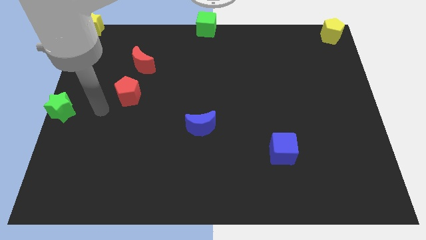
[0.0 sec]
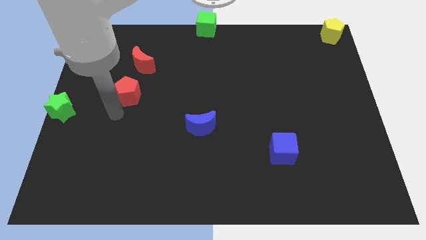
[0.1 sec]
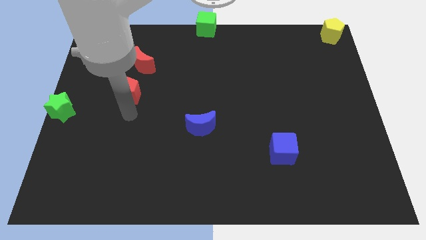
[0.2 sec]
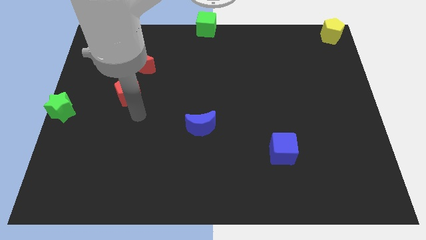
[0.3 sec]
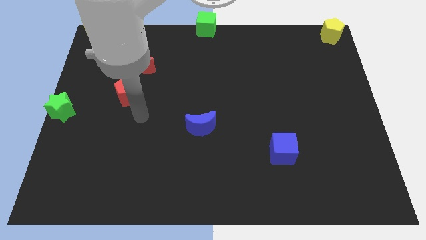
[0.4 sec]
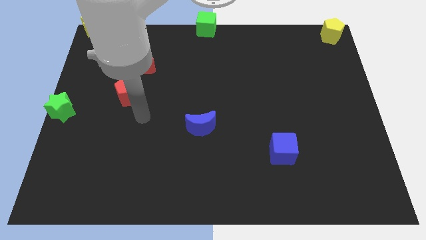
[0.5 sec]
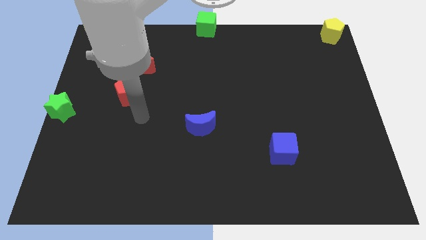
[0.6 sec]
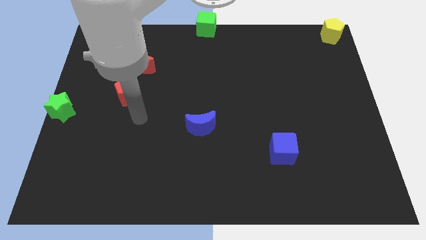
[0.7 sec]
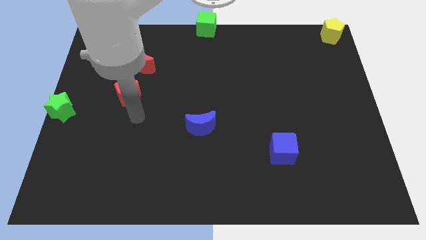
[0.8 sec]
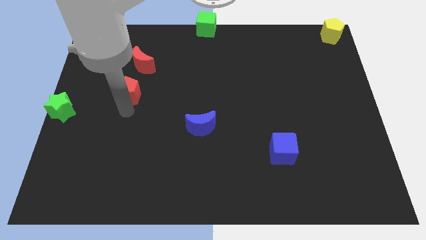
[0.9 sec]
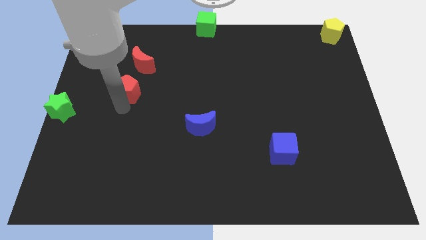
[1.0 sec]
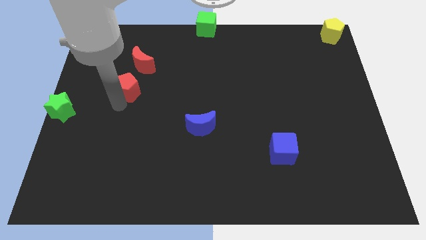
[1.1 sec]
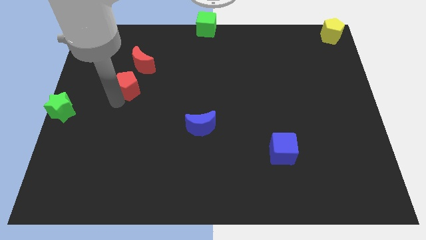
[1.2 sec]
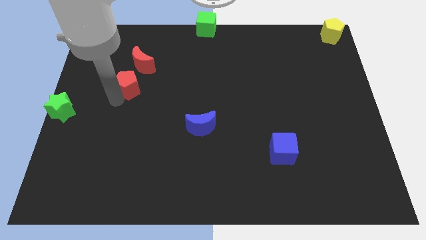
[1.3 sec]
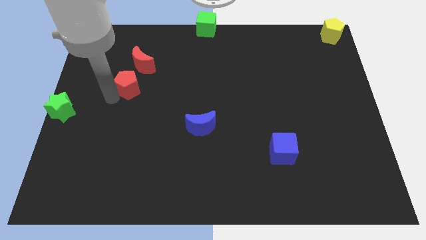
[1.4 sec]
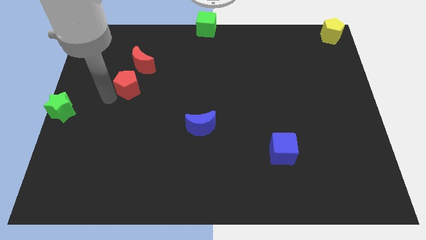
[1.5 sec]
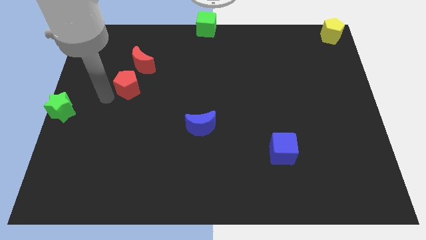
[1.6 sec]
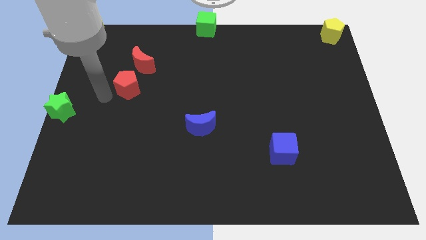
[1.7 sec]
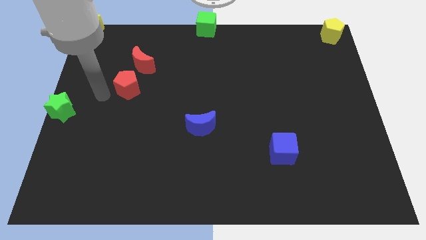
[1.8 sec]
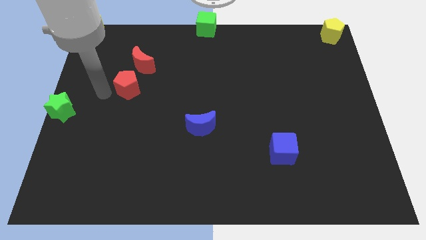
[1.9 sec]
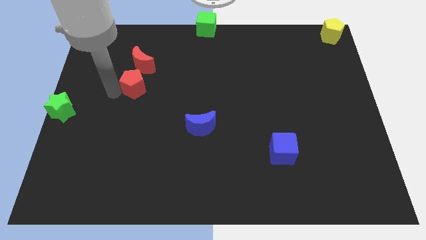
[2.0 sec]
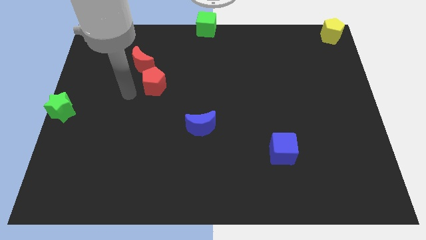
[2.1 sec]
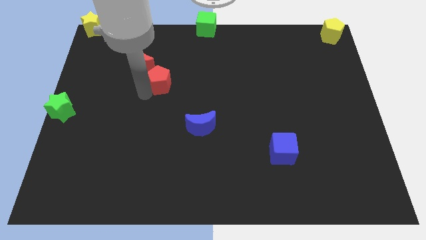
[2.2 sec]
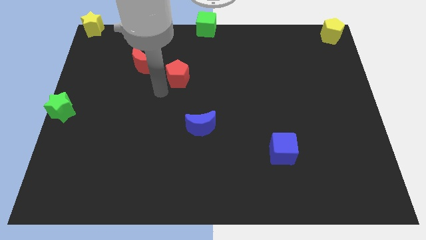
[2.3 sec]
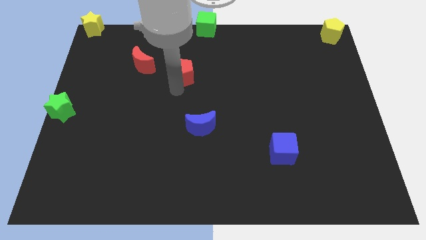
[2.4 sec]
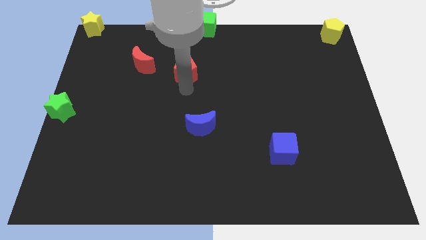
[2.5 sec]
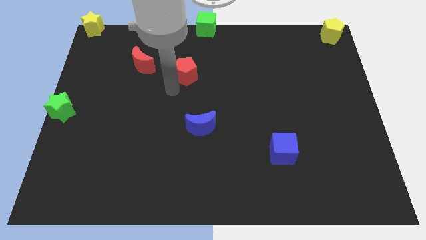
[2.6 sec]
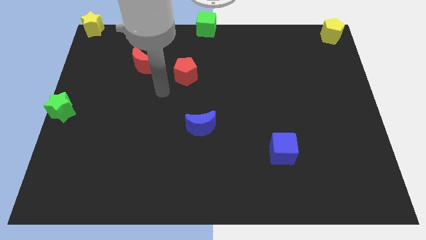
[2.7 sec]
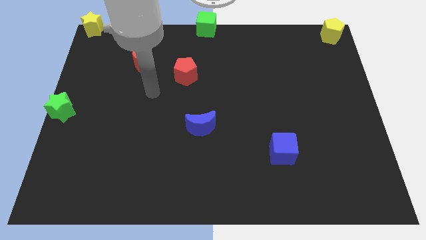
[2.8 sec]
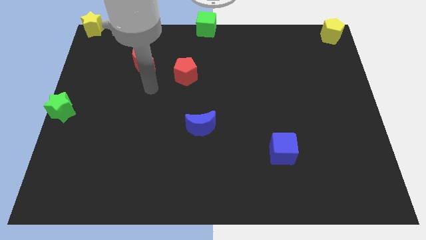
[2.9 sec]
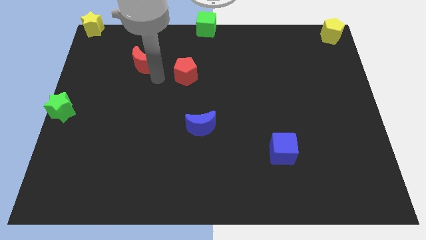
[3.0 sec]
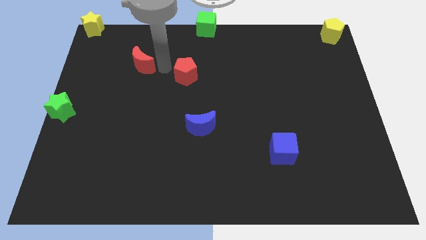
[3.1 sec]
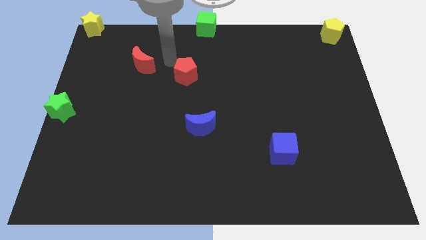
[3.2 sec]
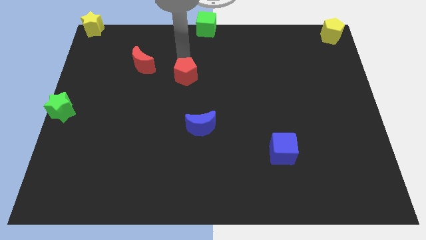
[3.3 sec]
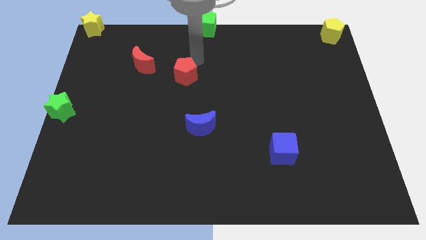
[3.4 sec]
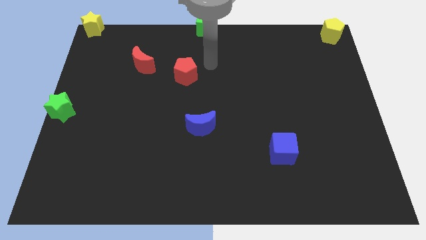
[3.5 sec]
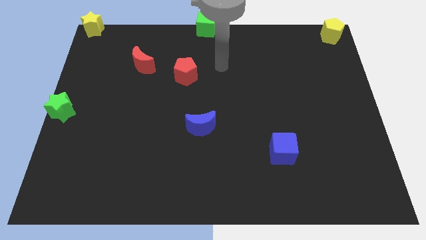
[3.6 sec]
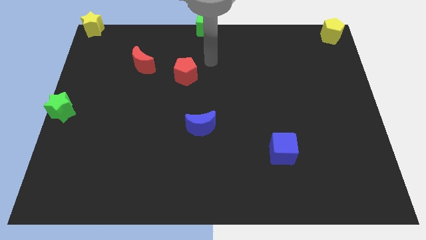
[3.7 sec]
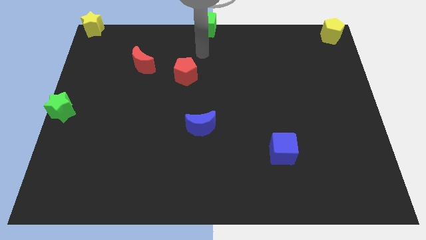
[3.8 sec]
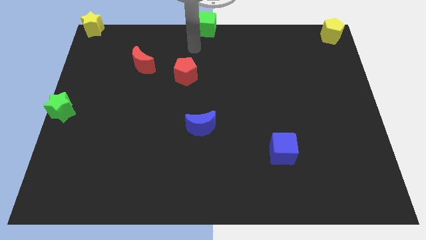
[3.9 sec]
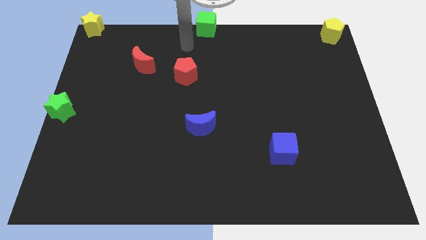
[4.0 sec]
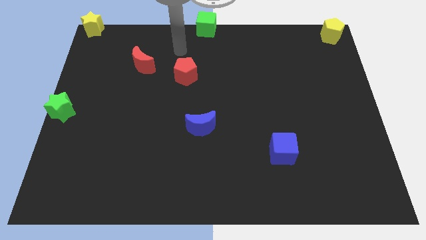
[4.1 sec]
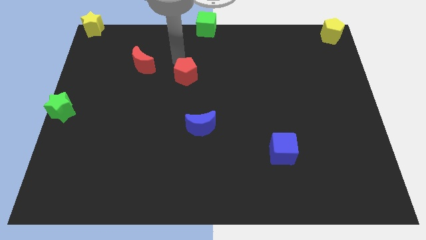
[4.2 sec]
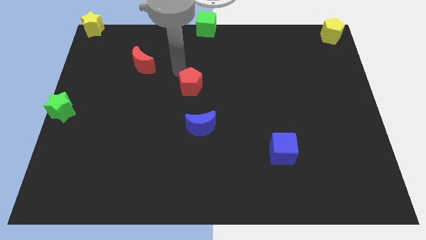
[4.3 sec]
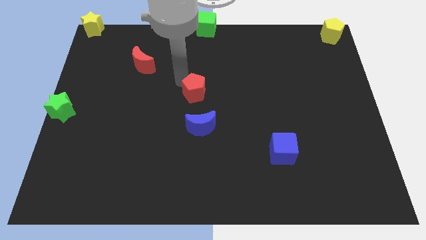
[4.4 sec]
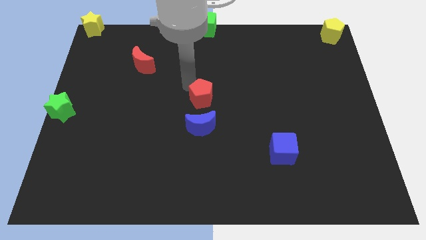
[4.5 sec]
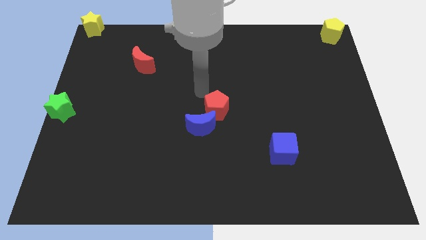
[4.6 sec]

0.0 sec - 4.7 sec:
place the red pentagon vertically above the blue moon

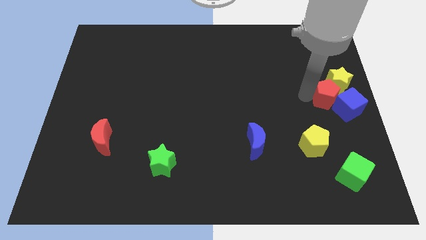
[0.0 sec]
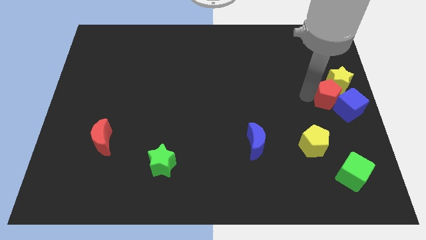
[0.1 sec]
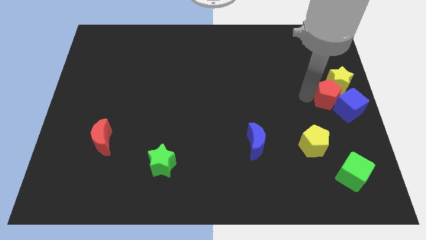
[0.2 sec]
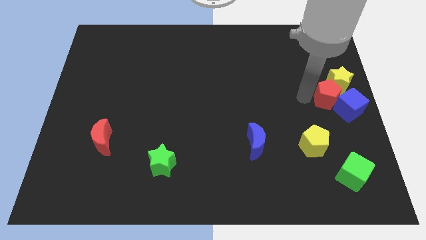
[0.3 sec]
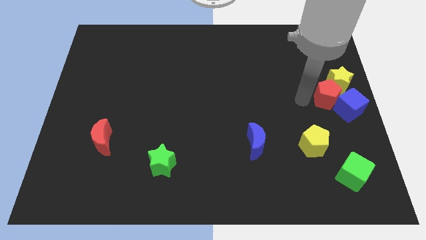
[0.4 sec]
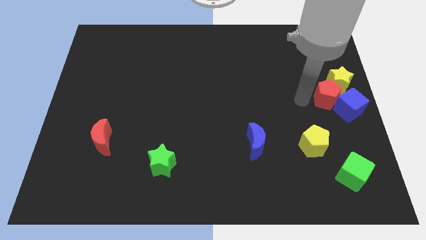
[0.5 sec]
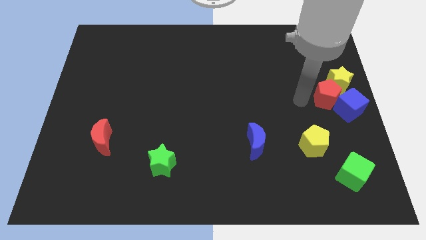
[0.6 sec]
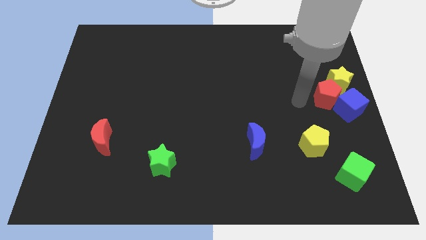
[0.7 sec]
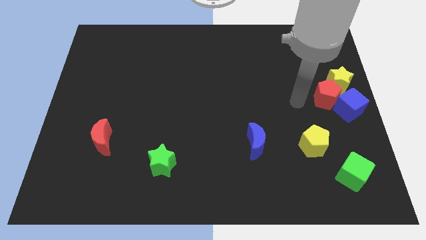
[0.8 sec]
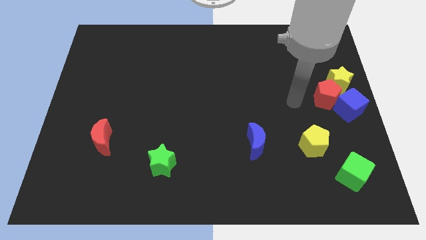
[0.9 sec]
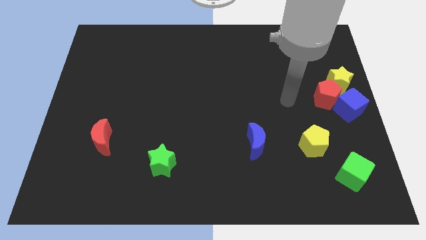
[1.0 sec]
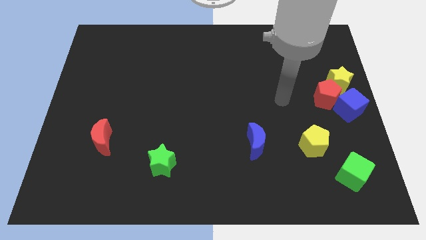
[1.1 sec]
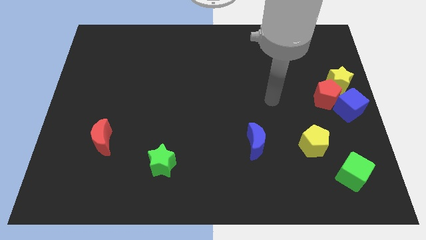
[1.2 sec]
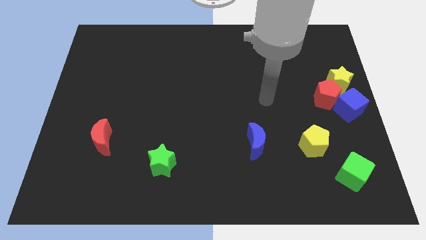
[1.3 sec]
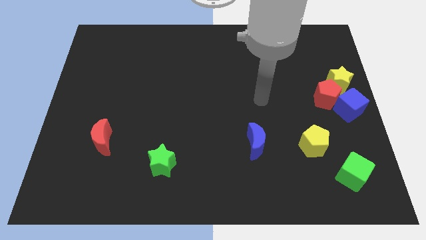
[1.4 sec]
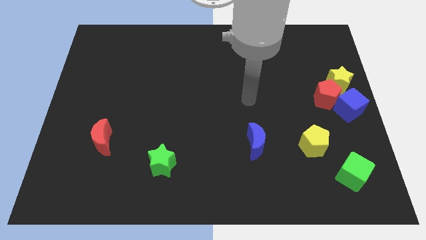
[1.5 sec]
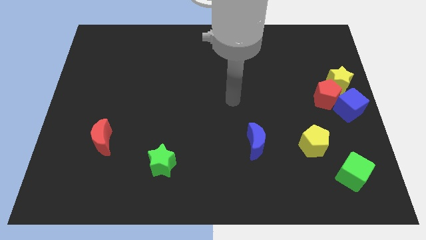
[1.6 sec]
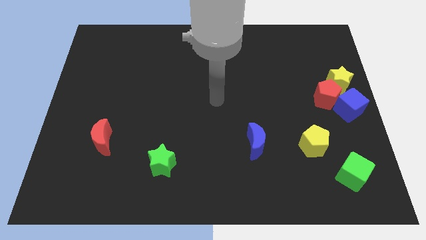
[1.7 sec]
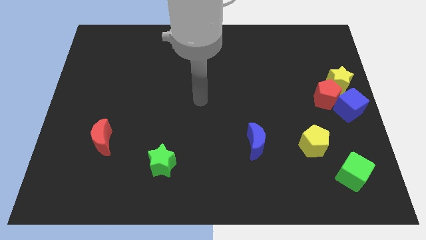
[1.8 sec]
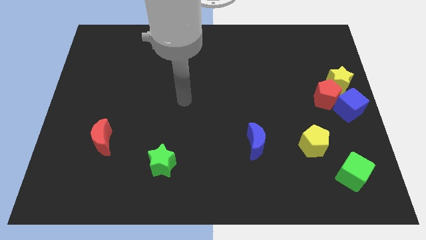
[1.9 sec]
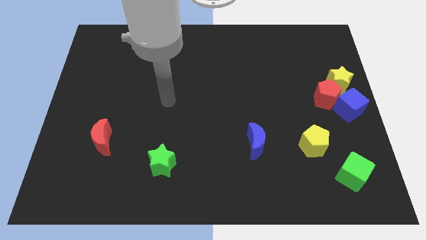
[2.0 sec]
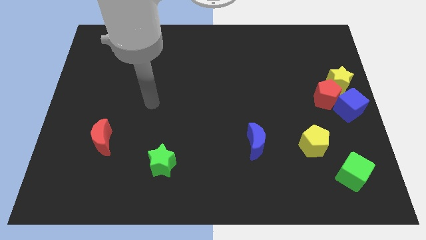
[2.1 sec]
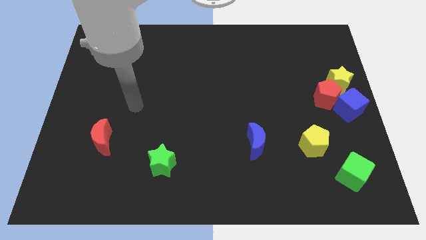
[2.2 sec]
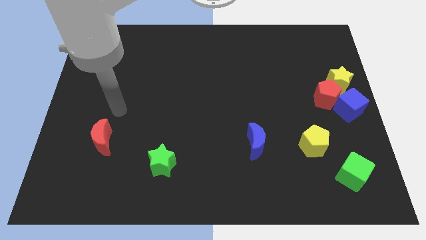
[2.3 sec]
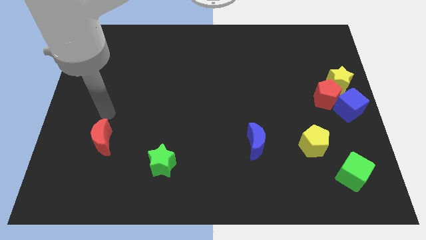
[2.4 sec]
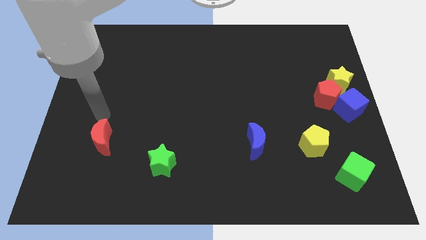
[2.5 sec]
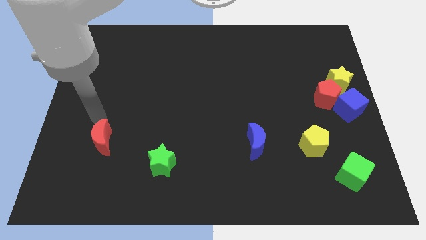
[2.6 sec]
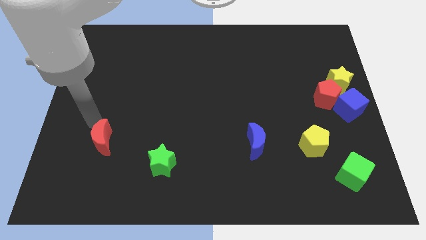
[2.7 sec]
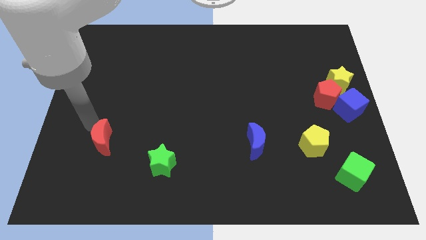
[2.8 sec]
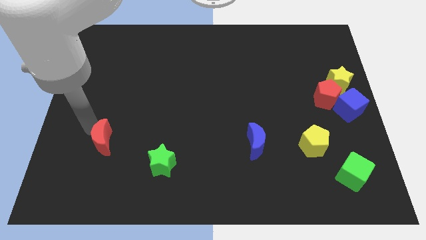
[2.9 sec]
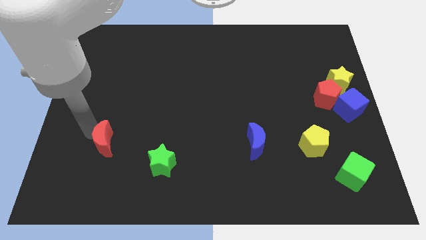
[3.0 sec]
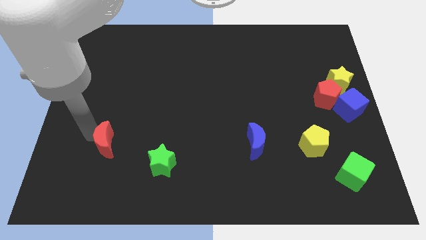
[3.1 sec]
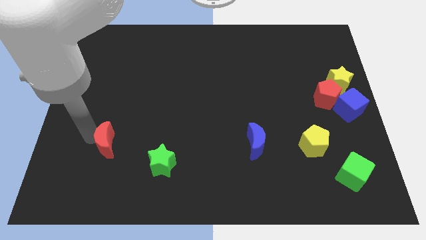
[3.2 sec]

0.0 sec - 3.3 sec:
move the arm away from the red pentagon

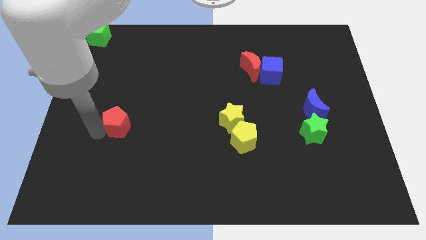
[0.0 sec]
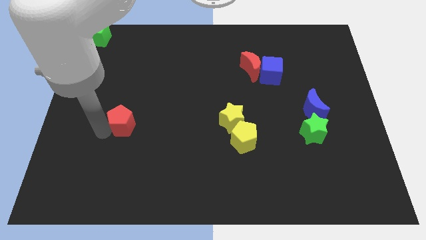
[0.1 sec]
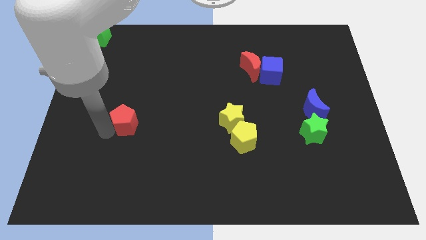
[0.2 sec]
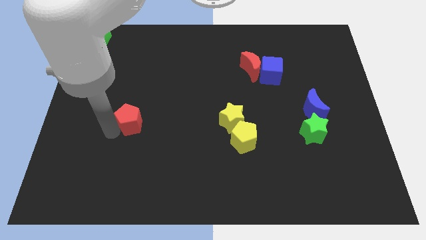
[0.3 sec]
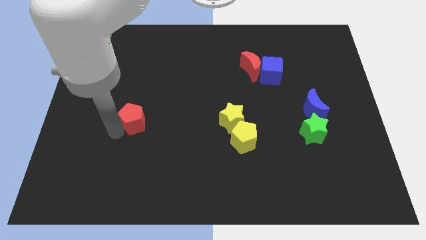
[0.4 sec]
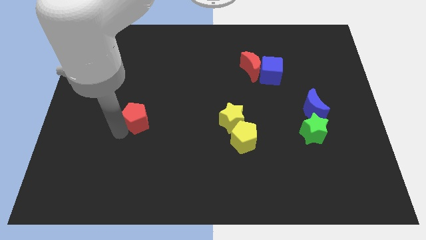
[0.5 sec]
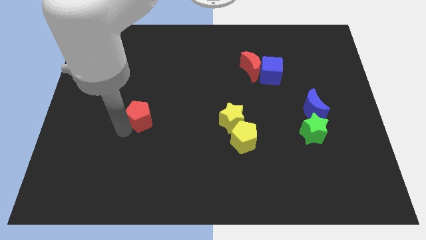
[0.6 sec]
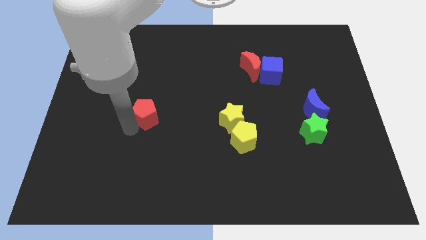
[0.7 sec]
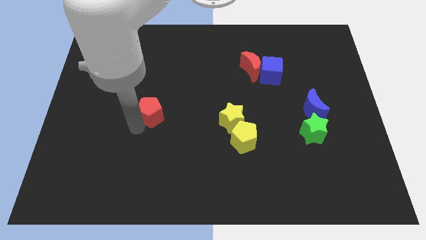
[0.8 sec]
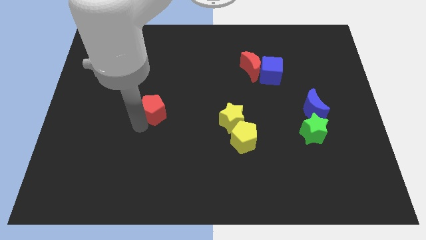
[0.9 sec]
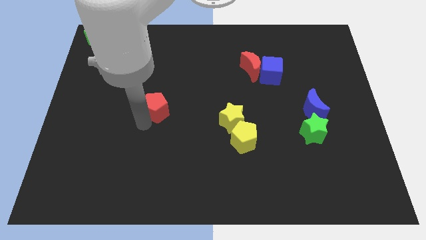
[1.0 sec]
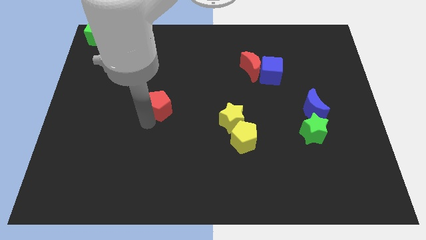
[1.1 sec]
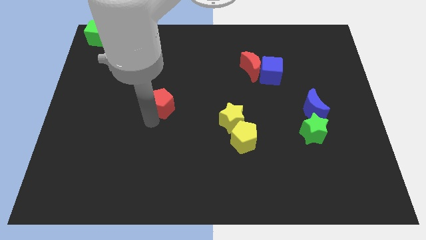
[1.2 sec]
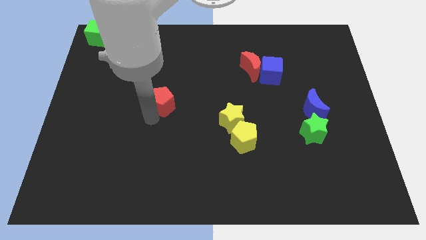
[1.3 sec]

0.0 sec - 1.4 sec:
move red pentagon towards center
